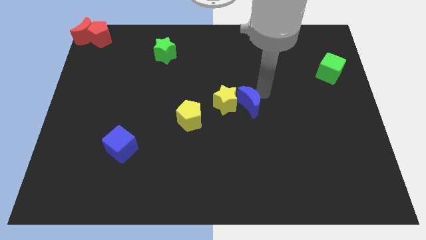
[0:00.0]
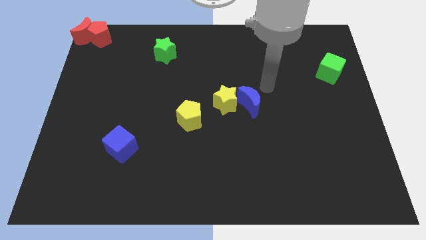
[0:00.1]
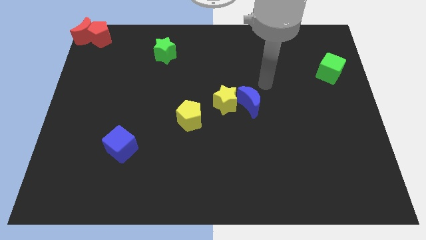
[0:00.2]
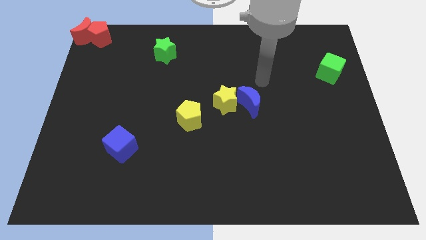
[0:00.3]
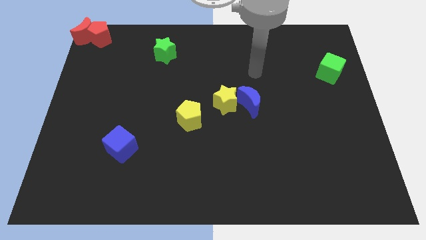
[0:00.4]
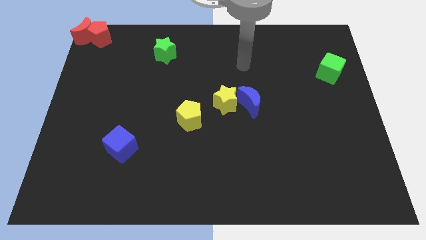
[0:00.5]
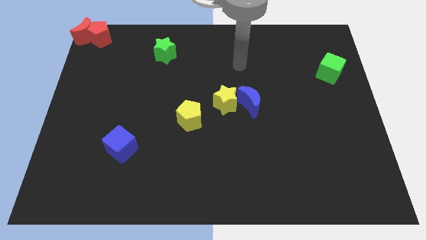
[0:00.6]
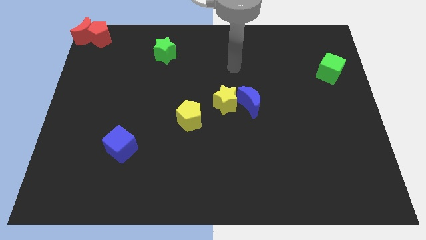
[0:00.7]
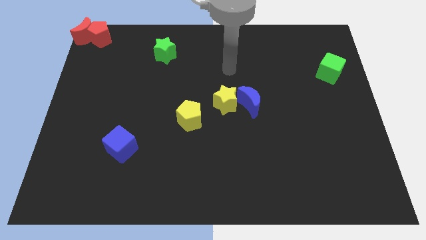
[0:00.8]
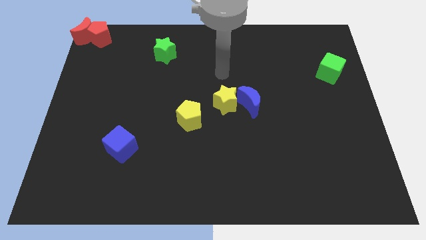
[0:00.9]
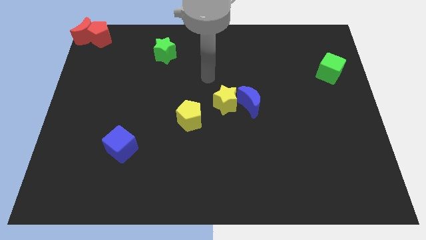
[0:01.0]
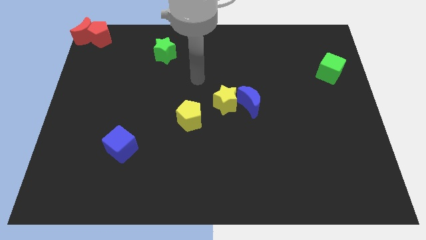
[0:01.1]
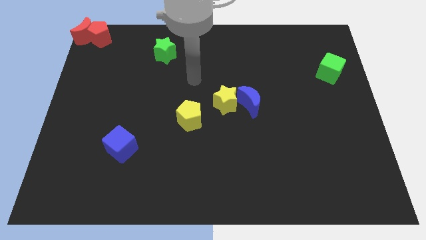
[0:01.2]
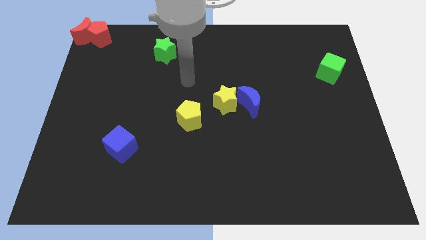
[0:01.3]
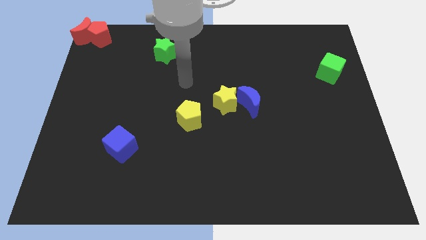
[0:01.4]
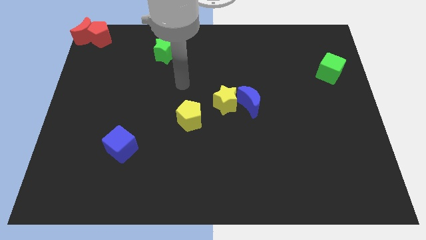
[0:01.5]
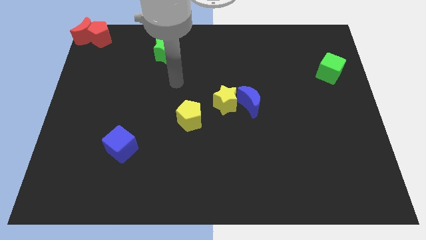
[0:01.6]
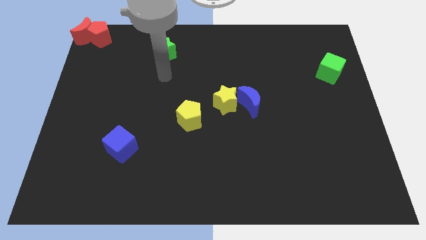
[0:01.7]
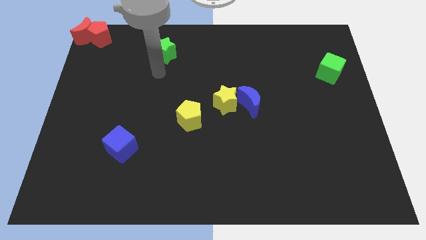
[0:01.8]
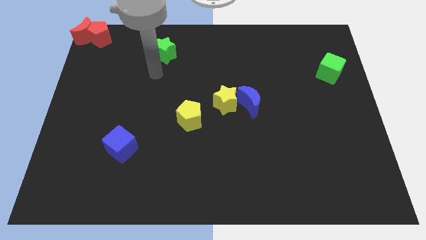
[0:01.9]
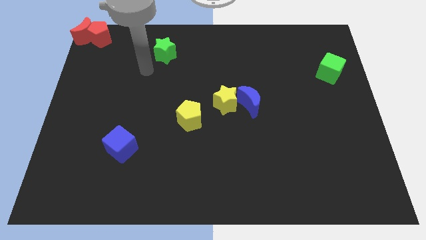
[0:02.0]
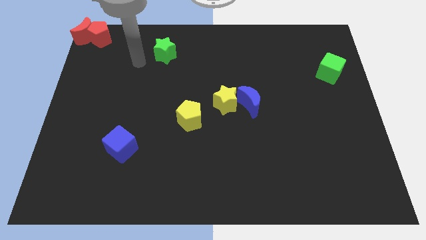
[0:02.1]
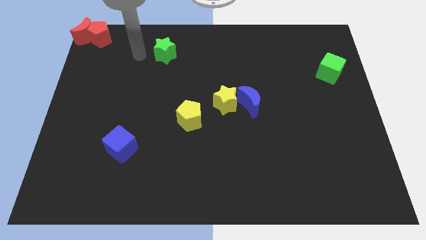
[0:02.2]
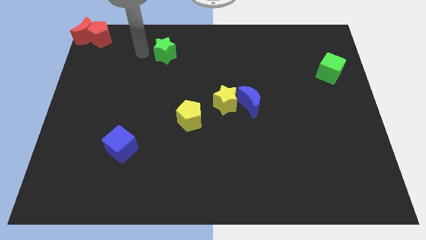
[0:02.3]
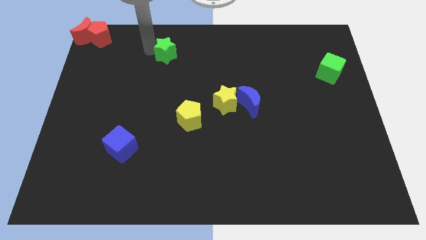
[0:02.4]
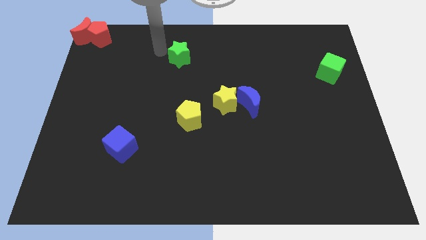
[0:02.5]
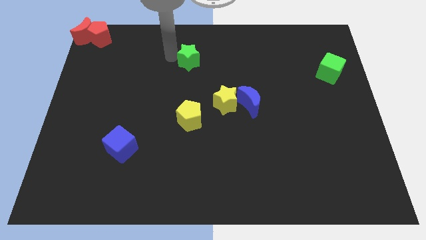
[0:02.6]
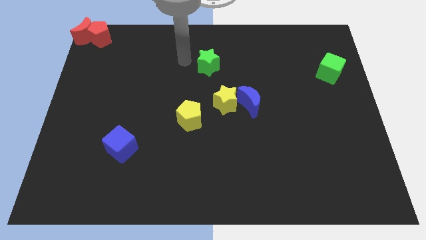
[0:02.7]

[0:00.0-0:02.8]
touch the green star

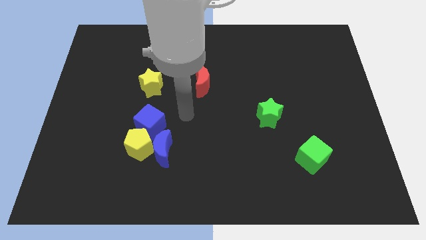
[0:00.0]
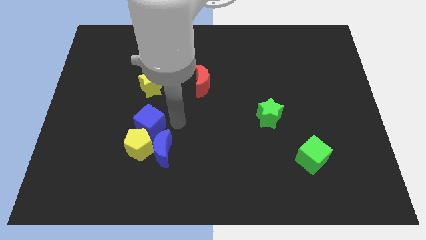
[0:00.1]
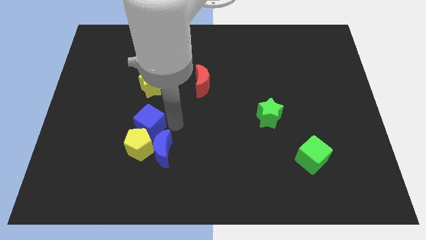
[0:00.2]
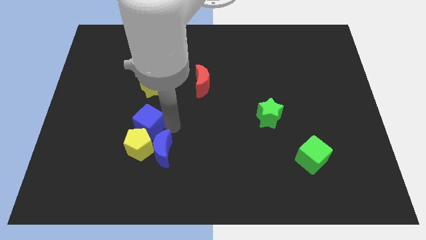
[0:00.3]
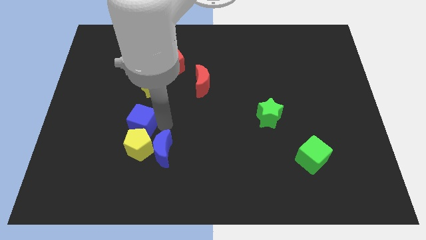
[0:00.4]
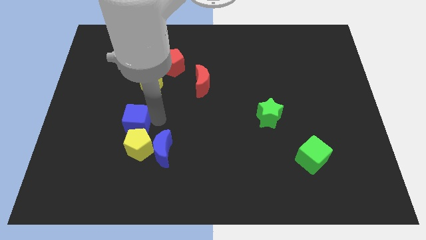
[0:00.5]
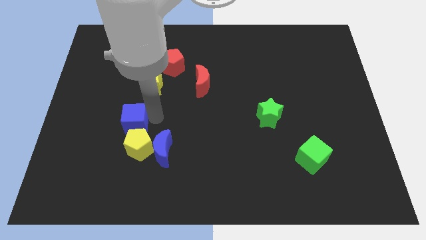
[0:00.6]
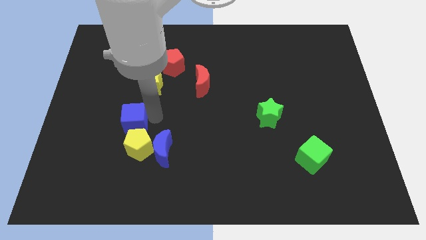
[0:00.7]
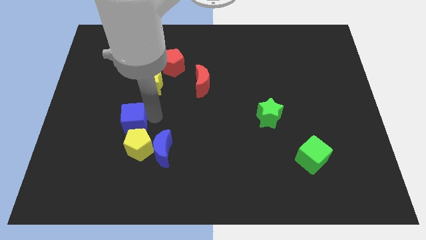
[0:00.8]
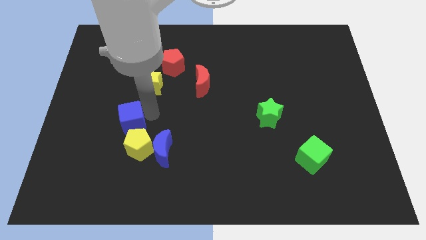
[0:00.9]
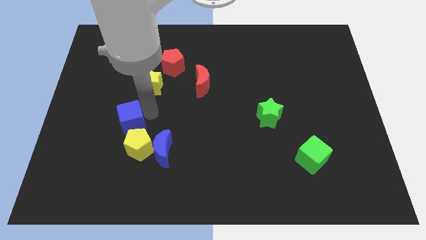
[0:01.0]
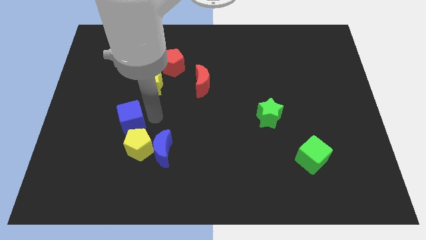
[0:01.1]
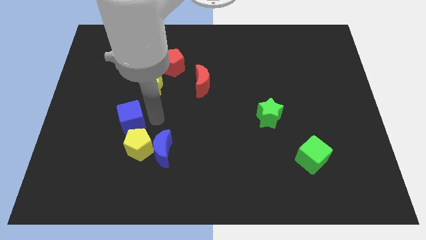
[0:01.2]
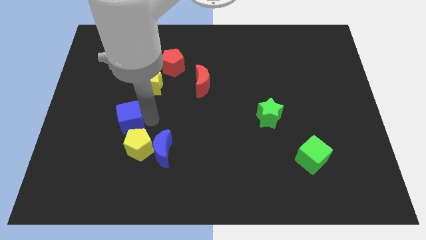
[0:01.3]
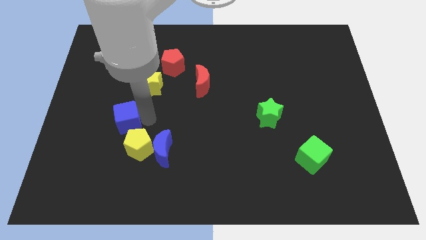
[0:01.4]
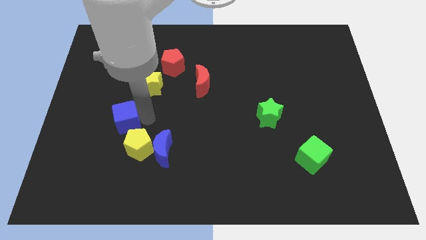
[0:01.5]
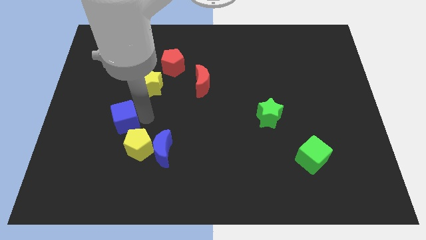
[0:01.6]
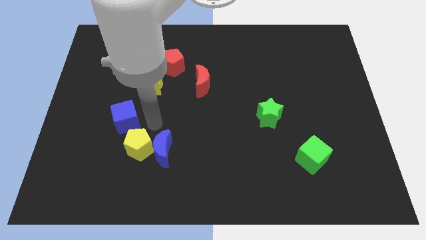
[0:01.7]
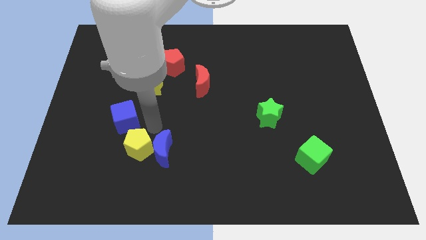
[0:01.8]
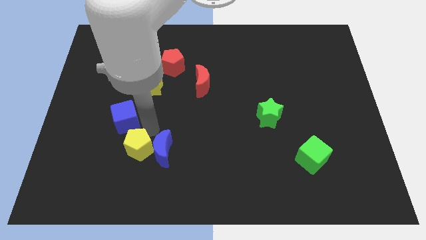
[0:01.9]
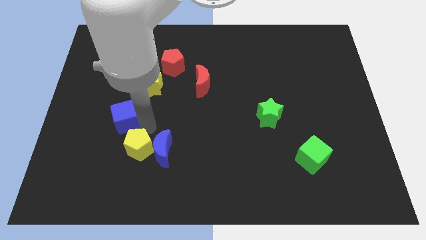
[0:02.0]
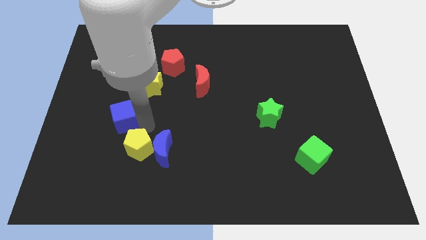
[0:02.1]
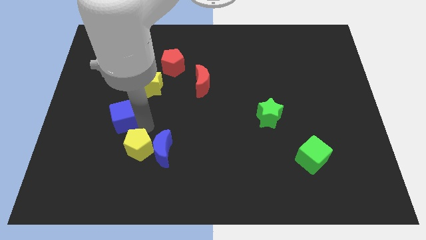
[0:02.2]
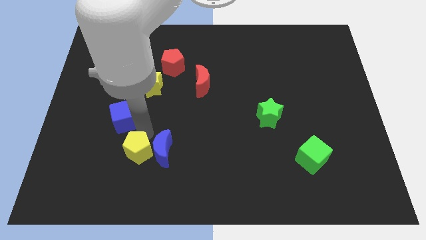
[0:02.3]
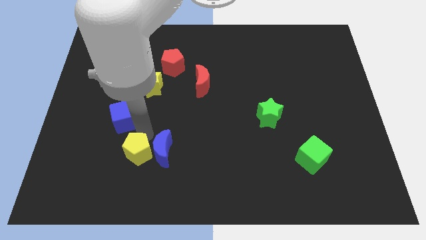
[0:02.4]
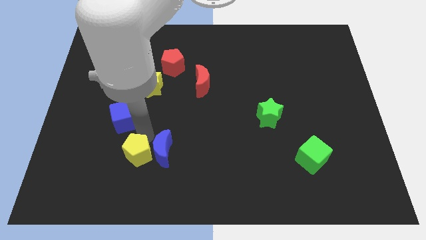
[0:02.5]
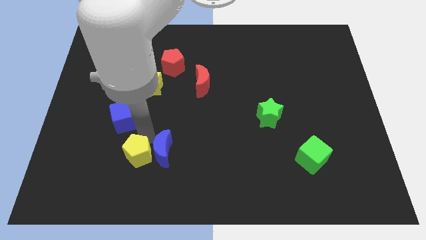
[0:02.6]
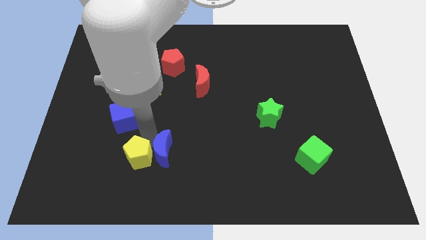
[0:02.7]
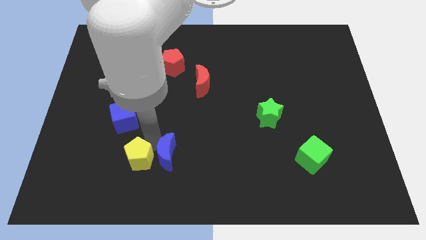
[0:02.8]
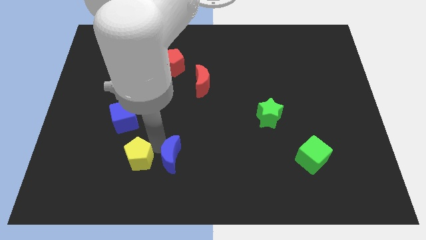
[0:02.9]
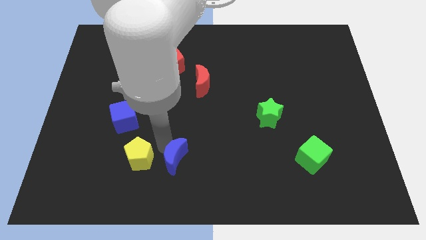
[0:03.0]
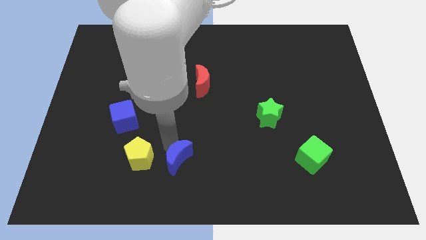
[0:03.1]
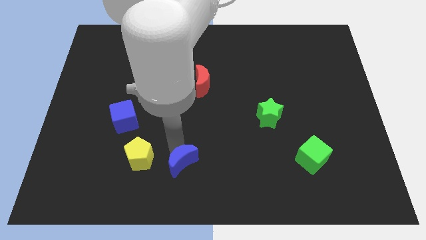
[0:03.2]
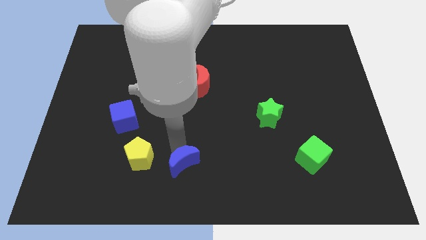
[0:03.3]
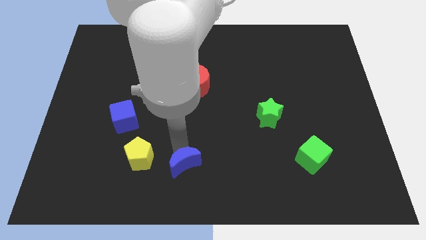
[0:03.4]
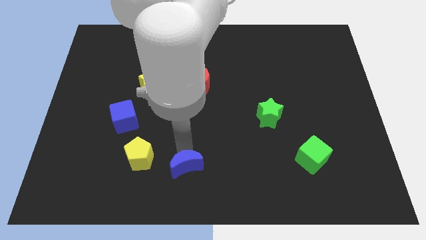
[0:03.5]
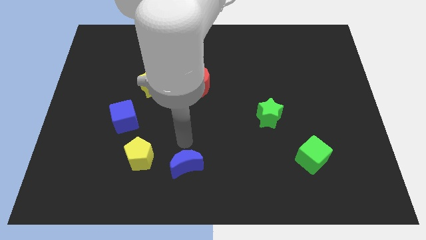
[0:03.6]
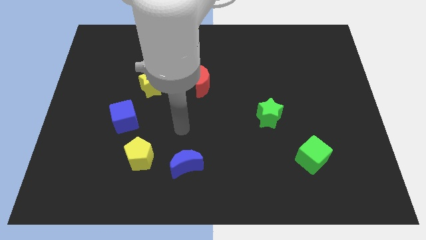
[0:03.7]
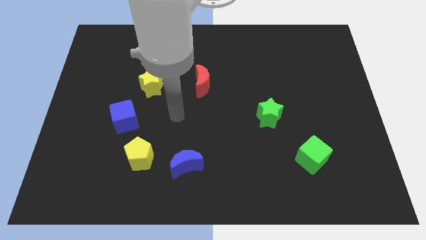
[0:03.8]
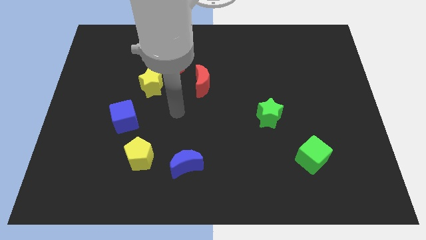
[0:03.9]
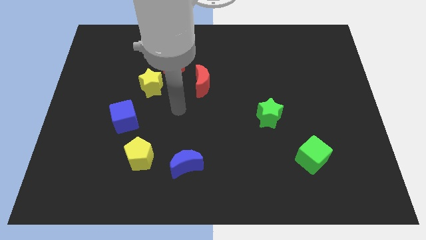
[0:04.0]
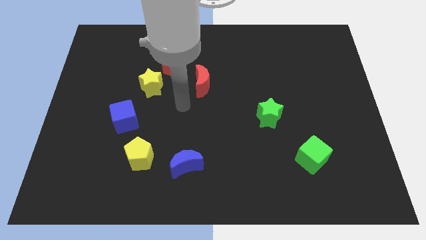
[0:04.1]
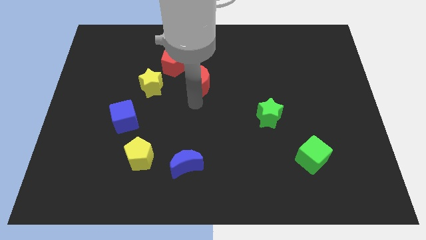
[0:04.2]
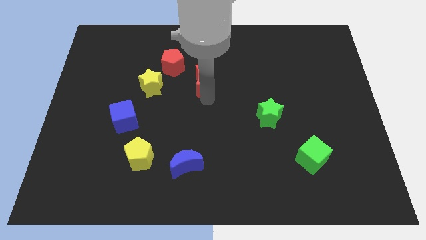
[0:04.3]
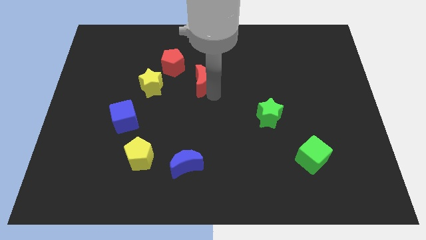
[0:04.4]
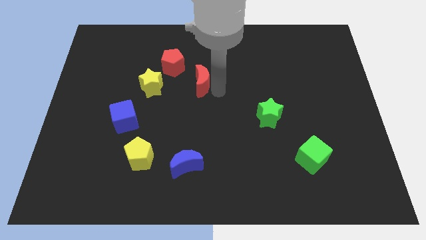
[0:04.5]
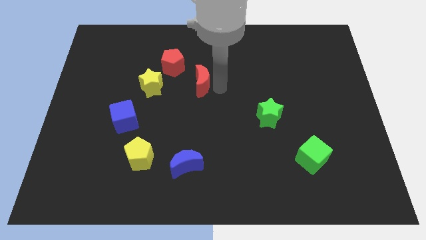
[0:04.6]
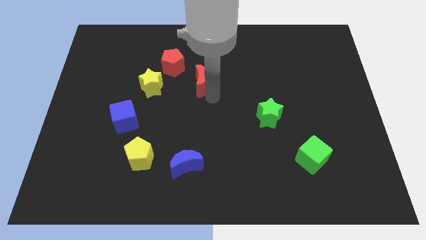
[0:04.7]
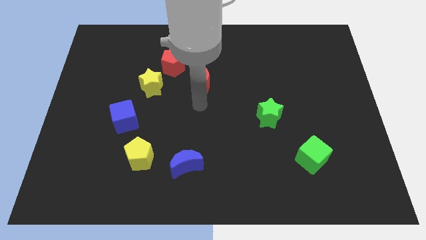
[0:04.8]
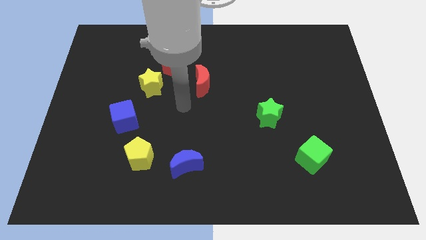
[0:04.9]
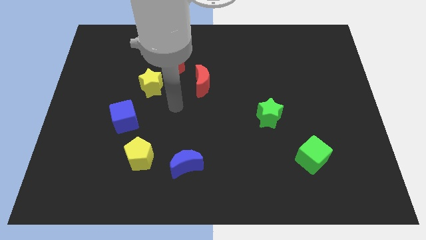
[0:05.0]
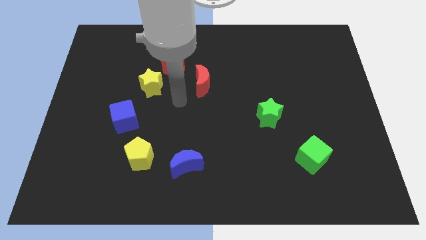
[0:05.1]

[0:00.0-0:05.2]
separate the blue cube and yellow pentagon

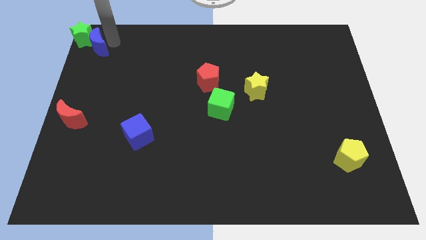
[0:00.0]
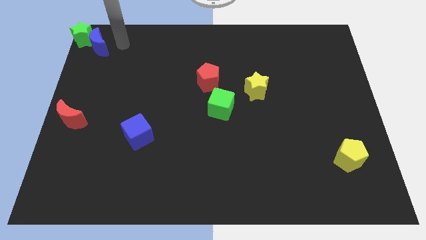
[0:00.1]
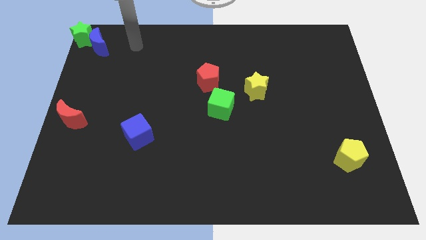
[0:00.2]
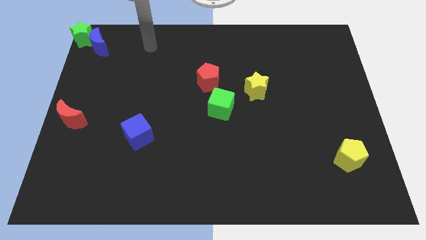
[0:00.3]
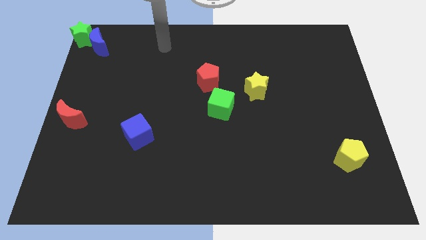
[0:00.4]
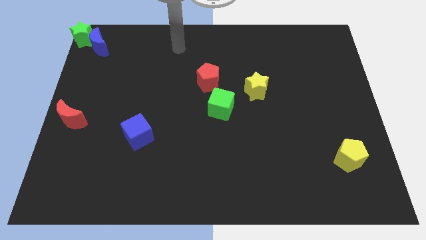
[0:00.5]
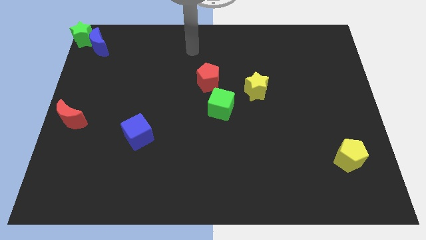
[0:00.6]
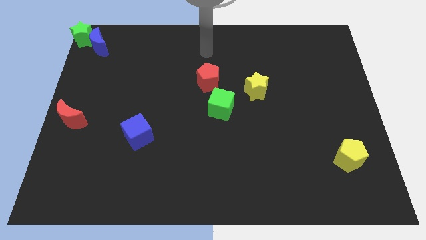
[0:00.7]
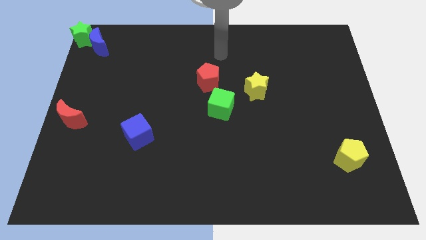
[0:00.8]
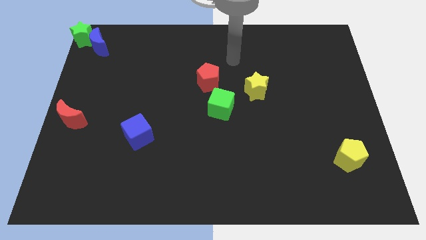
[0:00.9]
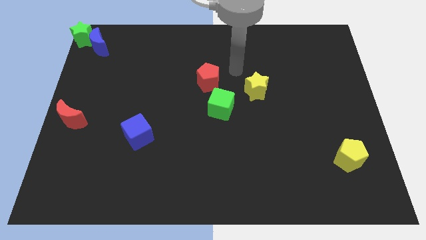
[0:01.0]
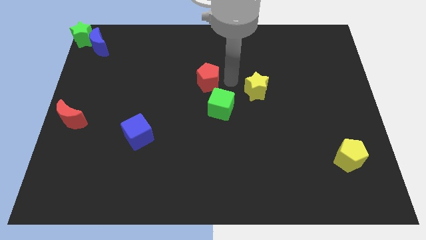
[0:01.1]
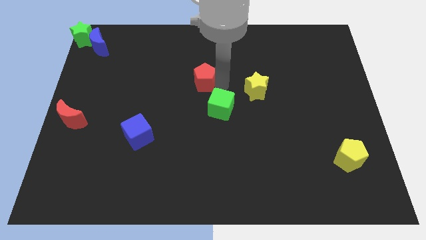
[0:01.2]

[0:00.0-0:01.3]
place the arm to the right of the red pentagon
